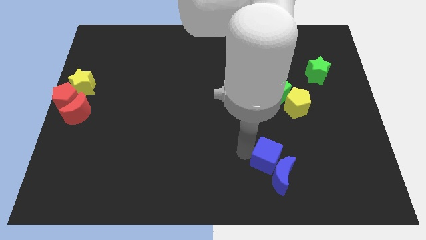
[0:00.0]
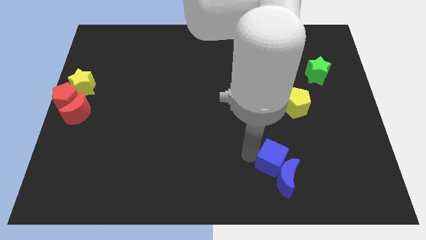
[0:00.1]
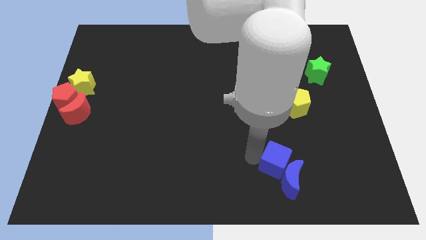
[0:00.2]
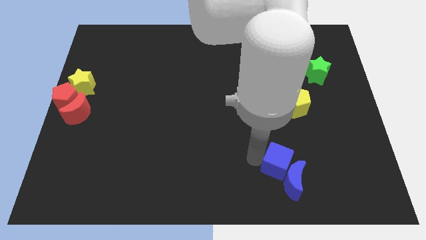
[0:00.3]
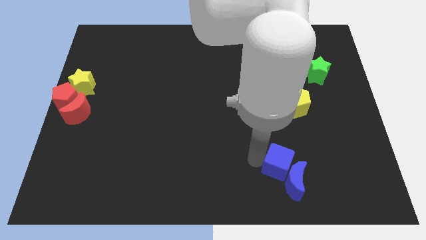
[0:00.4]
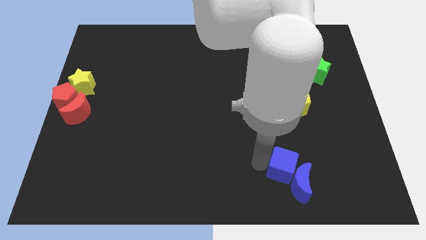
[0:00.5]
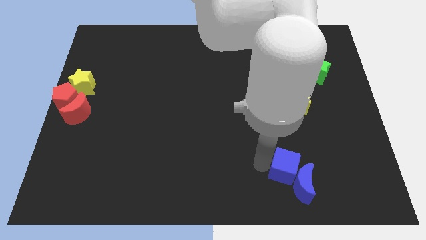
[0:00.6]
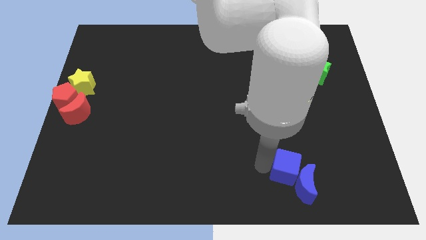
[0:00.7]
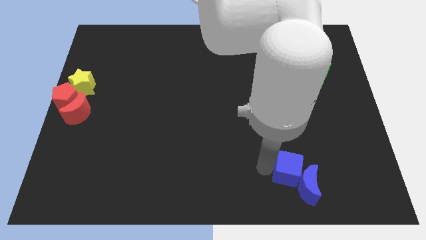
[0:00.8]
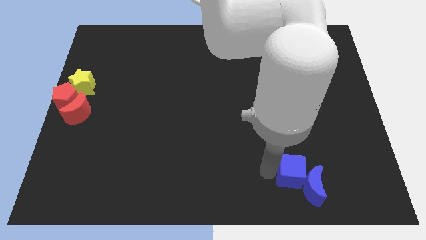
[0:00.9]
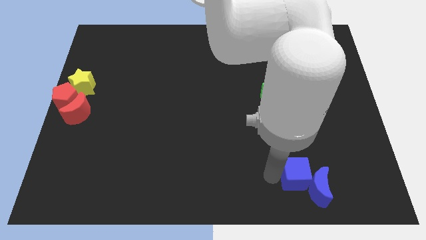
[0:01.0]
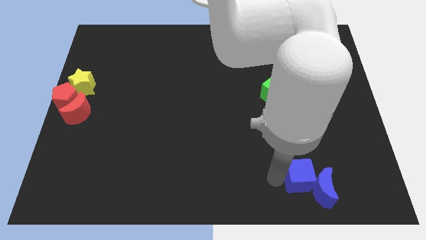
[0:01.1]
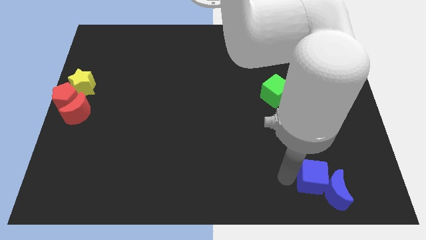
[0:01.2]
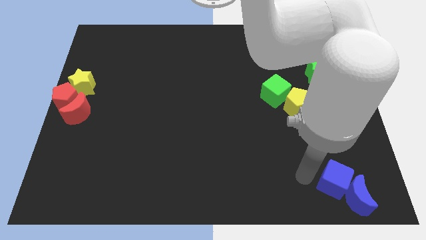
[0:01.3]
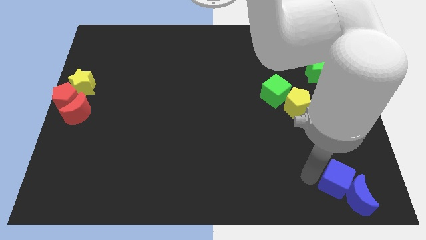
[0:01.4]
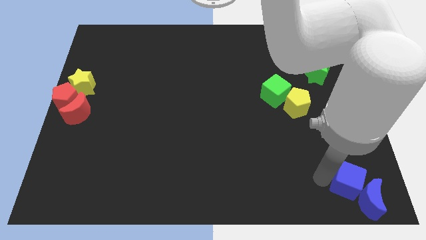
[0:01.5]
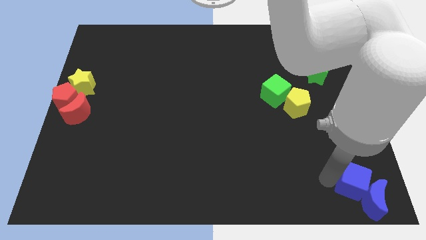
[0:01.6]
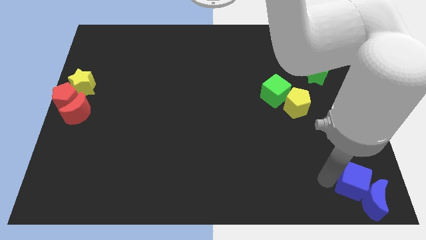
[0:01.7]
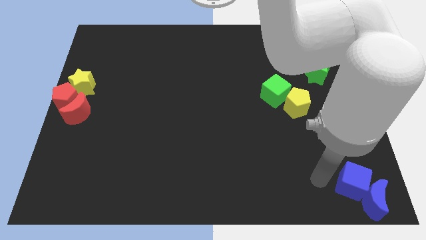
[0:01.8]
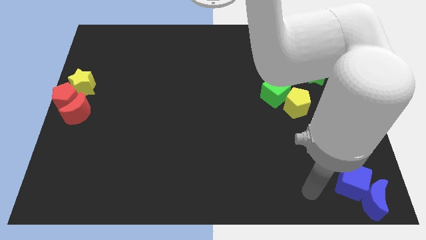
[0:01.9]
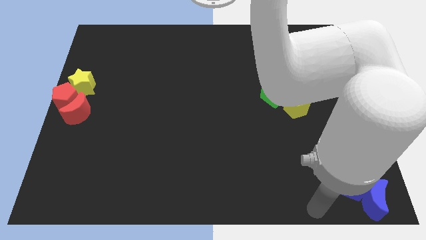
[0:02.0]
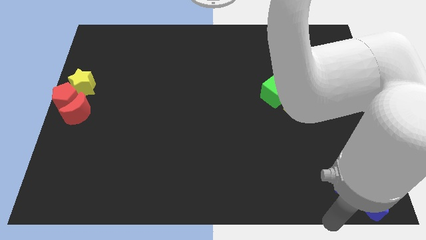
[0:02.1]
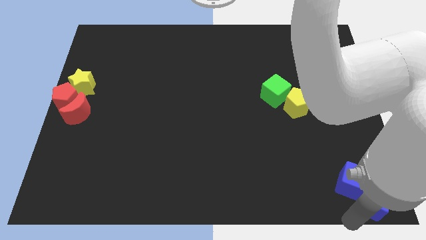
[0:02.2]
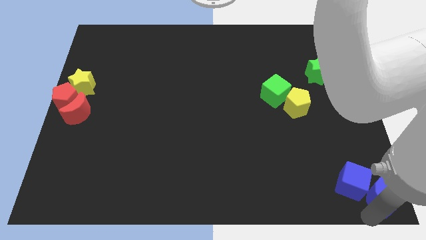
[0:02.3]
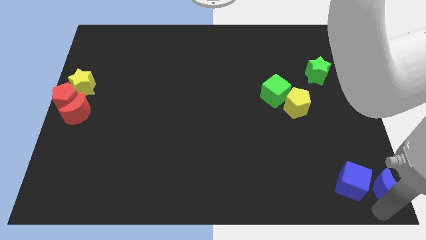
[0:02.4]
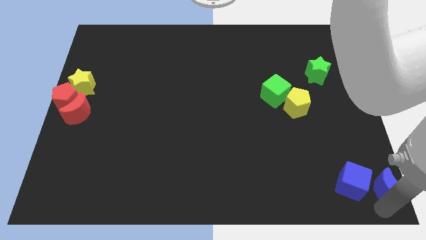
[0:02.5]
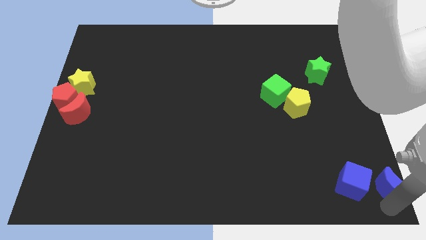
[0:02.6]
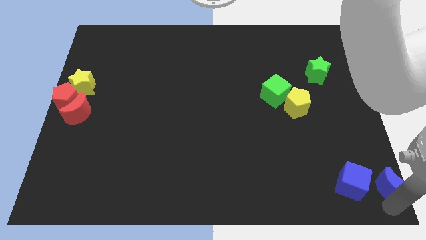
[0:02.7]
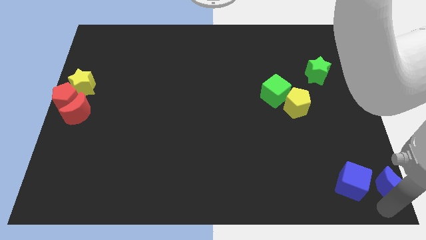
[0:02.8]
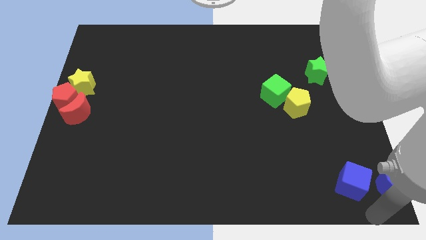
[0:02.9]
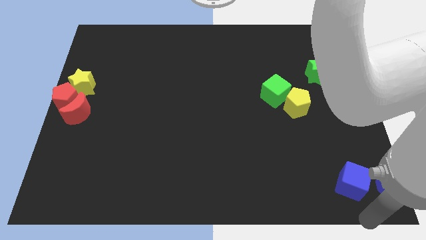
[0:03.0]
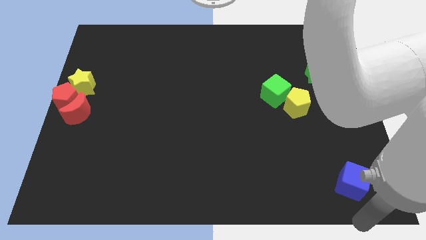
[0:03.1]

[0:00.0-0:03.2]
push the blue cube and blue moon to the right side of the board

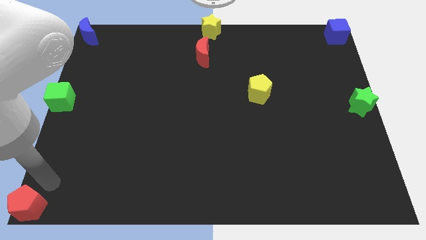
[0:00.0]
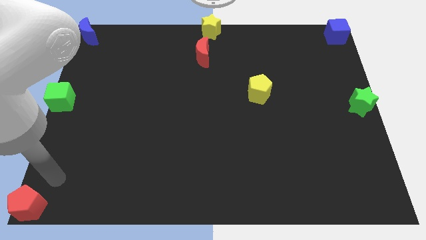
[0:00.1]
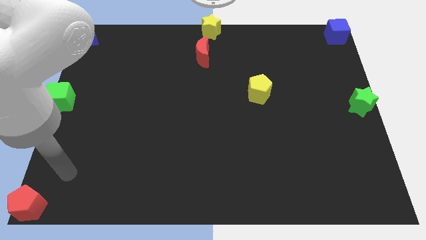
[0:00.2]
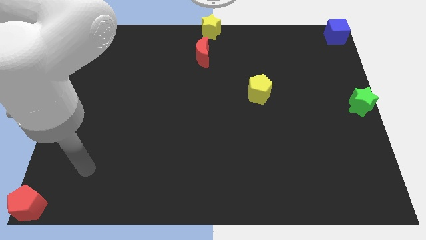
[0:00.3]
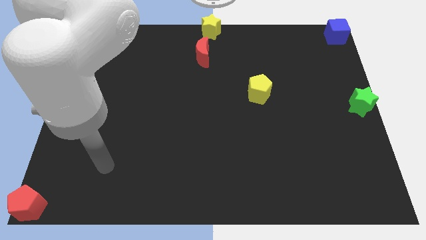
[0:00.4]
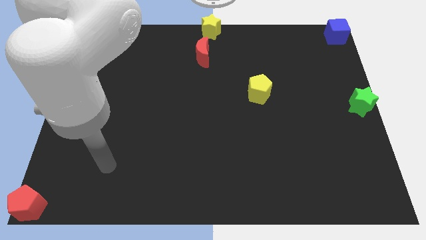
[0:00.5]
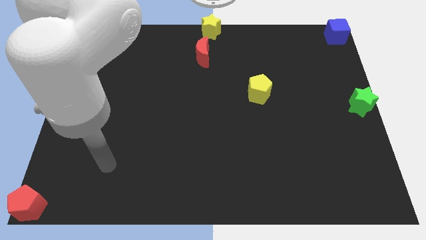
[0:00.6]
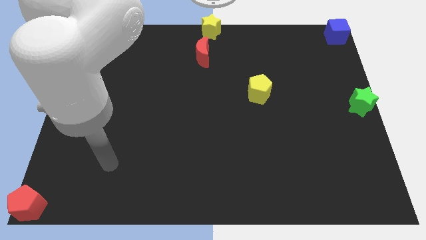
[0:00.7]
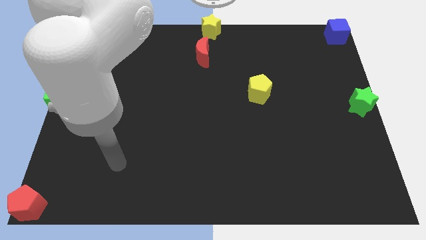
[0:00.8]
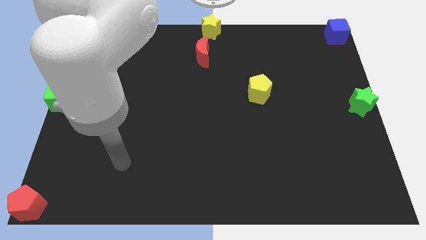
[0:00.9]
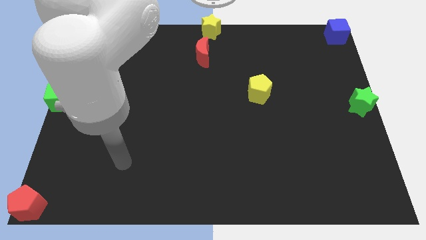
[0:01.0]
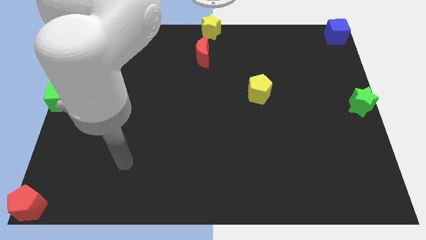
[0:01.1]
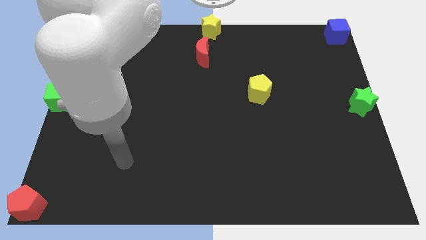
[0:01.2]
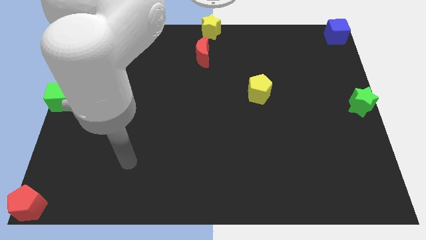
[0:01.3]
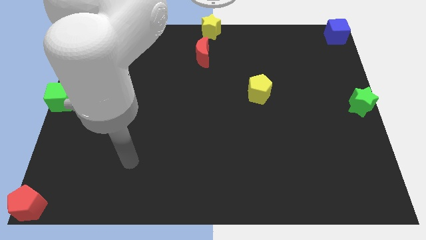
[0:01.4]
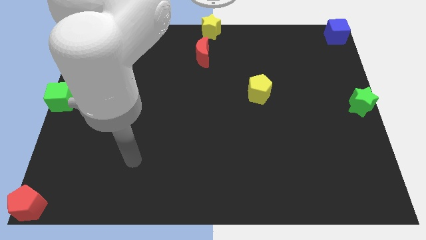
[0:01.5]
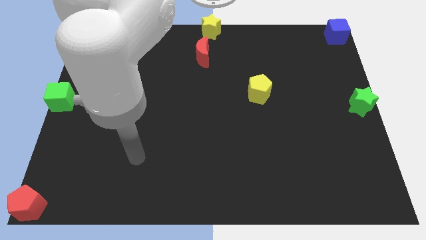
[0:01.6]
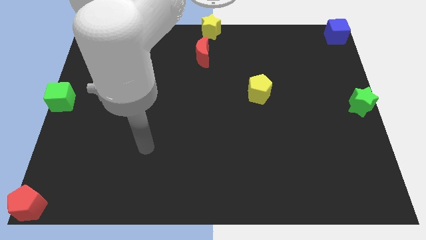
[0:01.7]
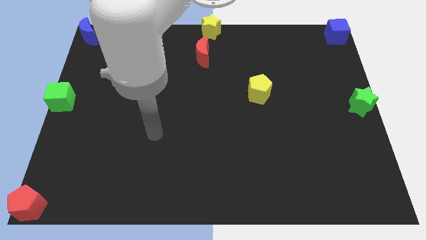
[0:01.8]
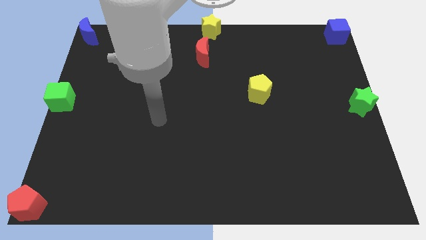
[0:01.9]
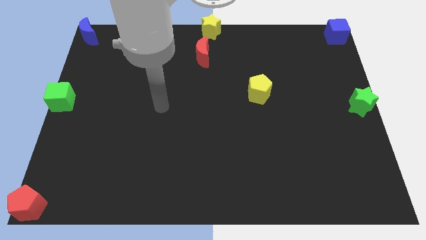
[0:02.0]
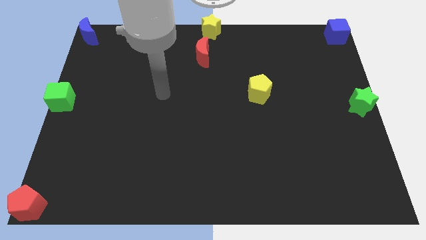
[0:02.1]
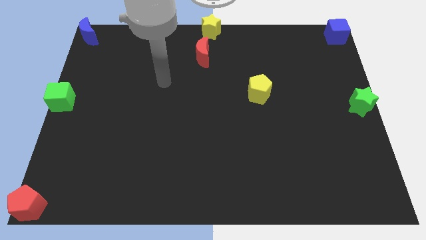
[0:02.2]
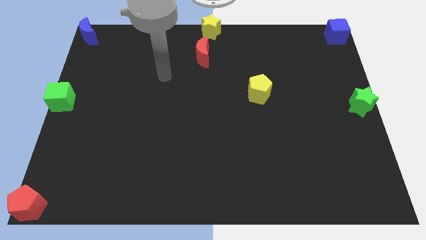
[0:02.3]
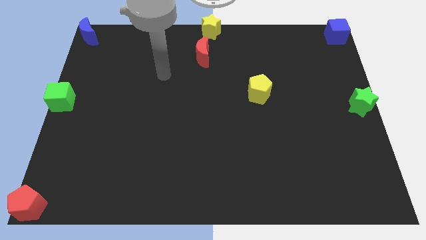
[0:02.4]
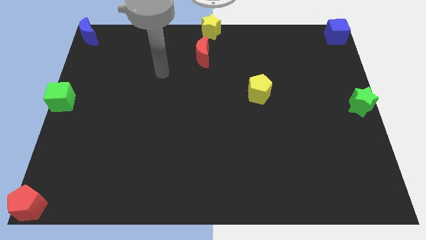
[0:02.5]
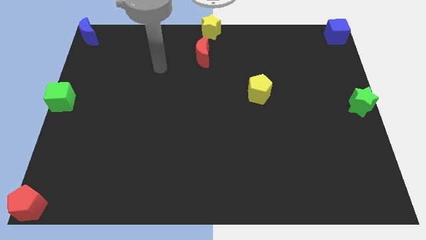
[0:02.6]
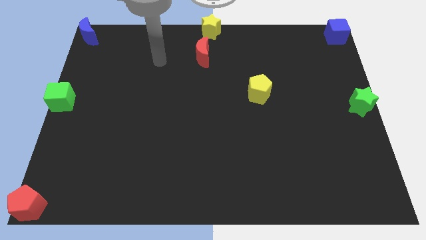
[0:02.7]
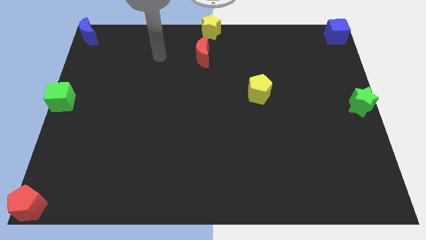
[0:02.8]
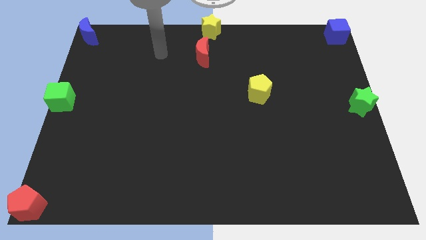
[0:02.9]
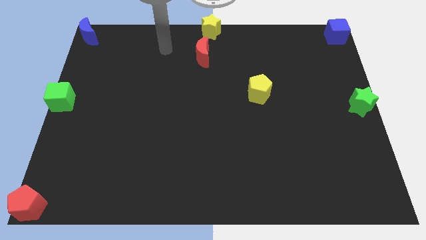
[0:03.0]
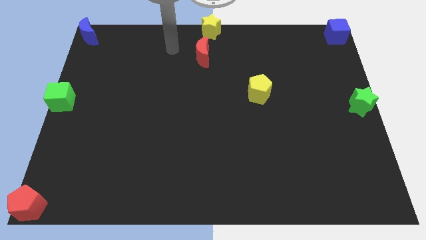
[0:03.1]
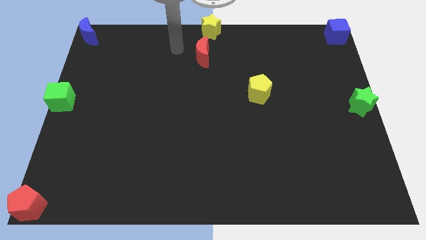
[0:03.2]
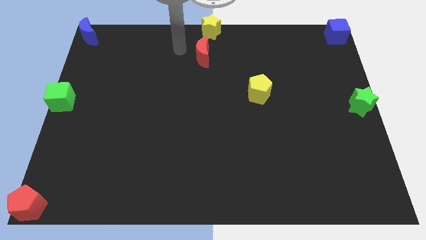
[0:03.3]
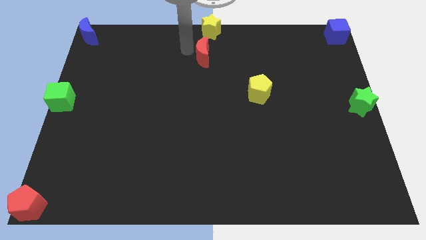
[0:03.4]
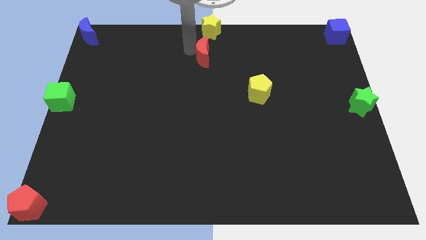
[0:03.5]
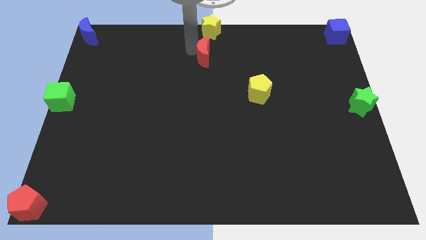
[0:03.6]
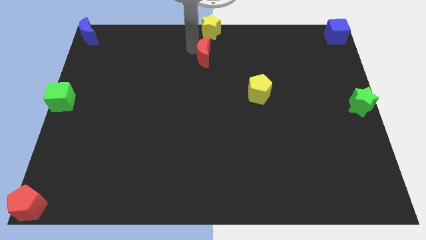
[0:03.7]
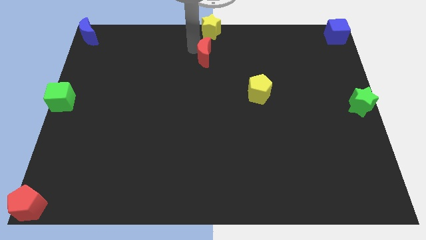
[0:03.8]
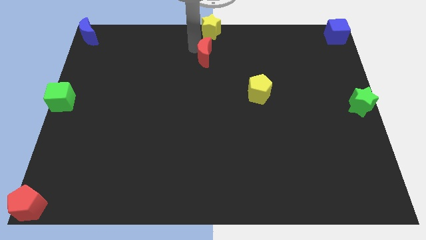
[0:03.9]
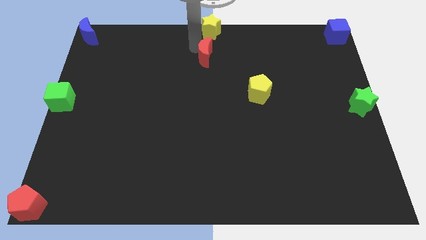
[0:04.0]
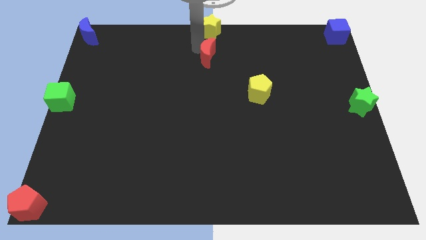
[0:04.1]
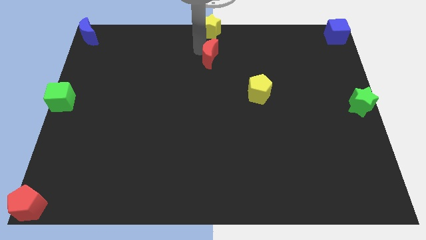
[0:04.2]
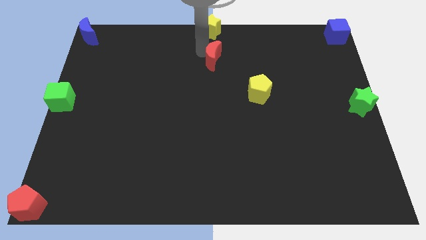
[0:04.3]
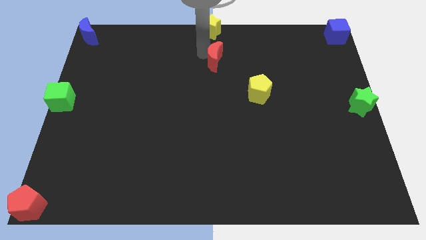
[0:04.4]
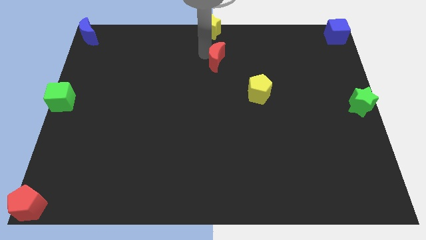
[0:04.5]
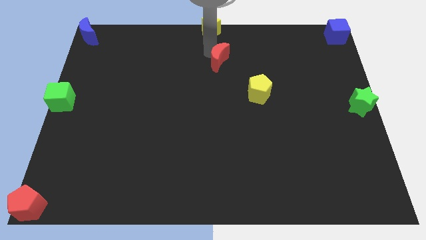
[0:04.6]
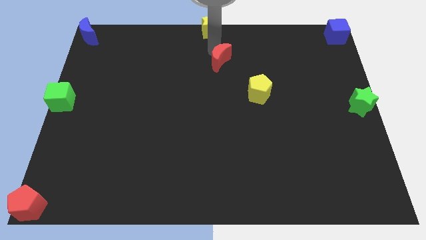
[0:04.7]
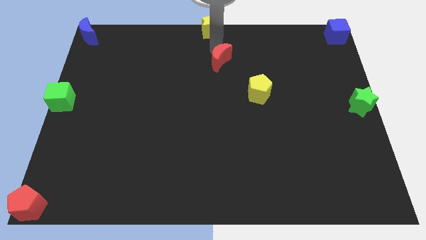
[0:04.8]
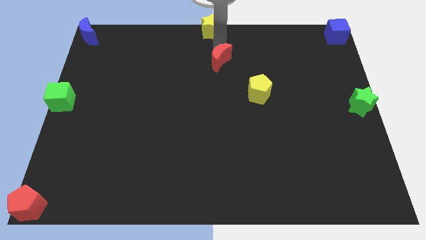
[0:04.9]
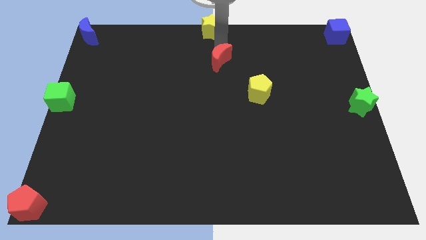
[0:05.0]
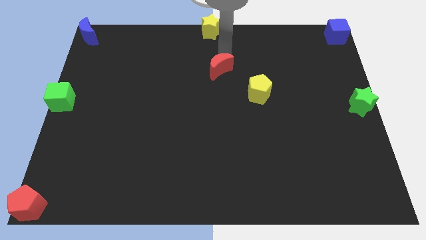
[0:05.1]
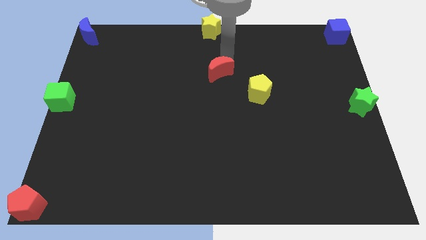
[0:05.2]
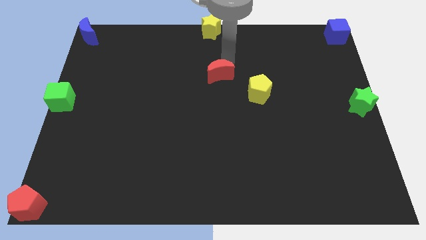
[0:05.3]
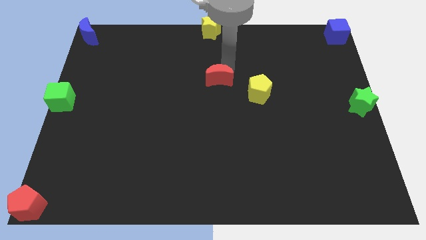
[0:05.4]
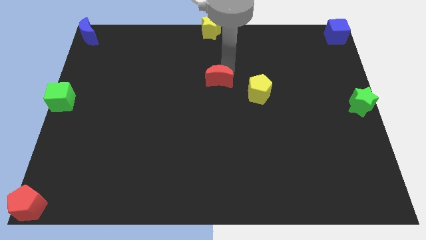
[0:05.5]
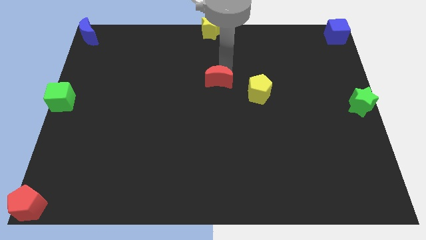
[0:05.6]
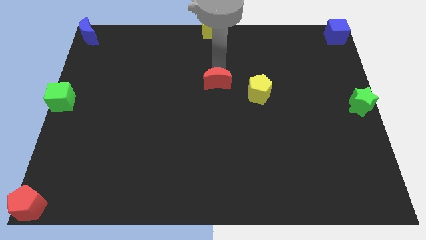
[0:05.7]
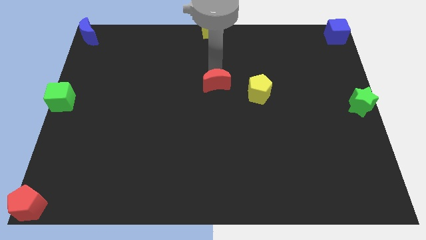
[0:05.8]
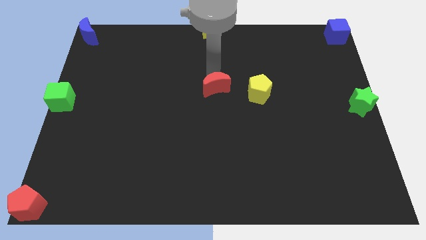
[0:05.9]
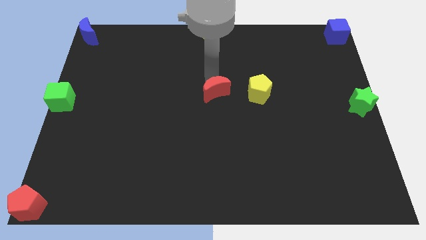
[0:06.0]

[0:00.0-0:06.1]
place the red crescent at the left side of the yellow pentagon
